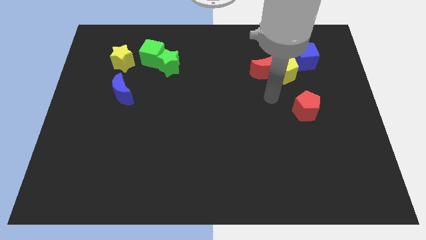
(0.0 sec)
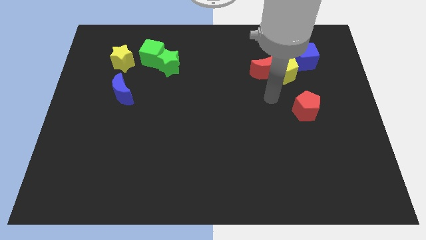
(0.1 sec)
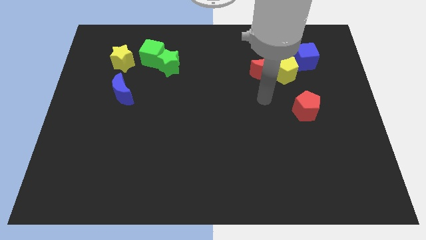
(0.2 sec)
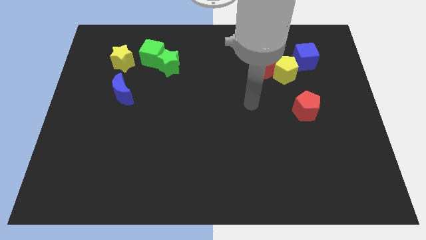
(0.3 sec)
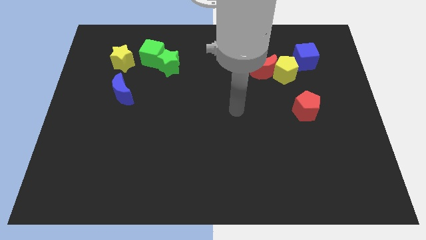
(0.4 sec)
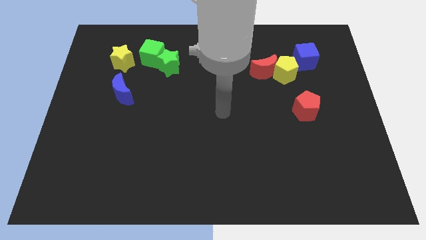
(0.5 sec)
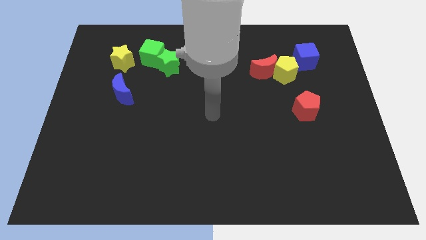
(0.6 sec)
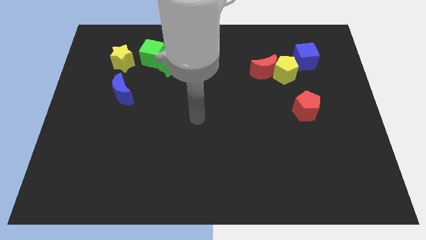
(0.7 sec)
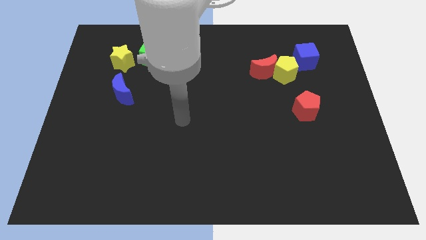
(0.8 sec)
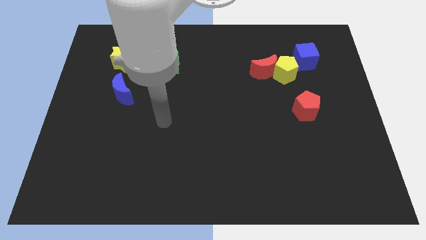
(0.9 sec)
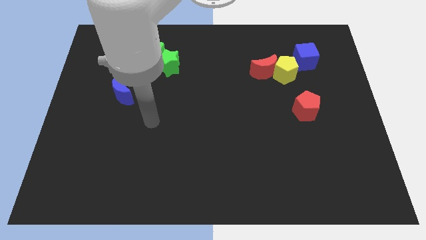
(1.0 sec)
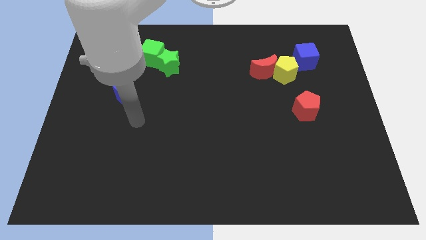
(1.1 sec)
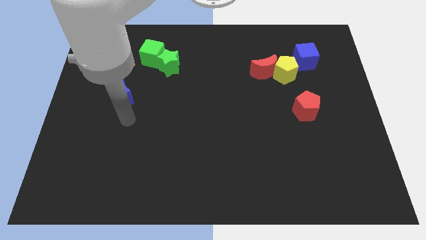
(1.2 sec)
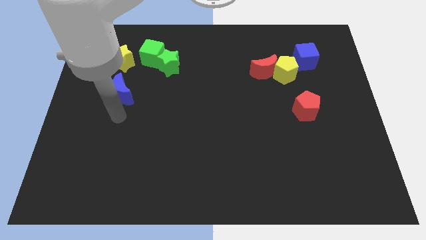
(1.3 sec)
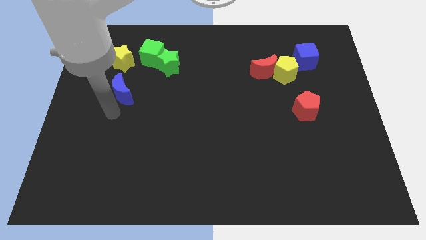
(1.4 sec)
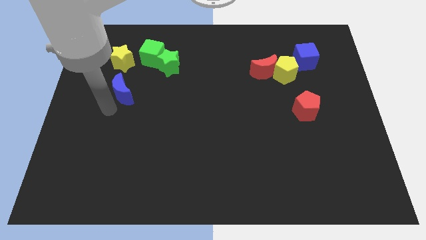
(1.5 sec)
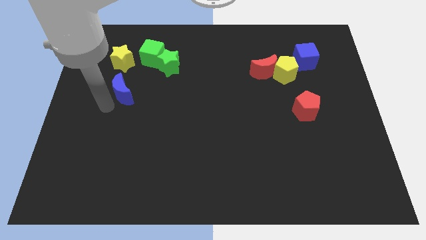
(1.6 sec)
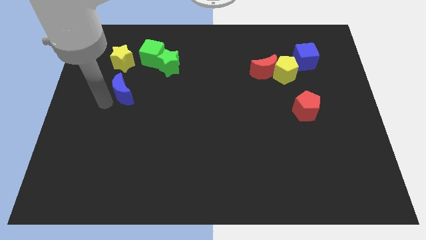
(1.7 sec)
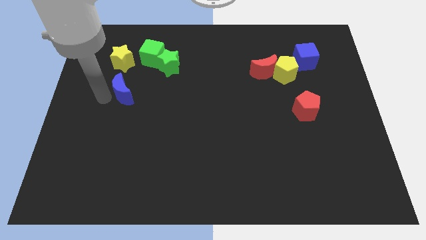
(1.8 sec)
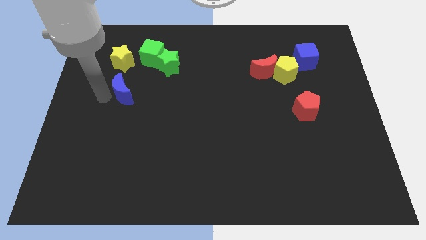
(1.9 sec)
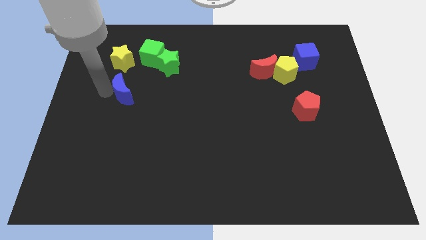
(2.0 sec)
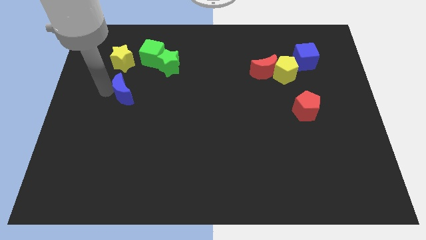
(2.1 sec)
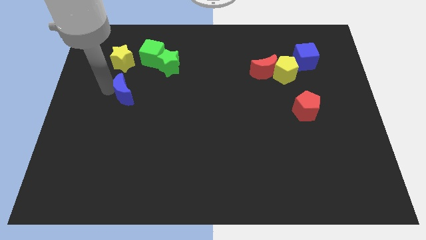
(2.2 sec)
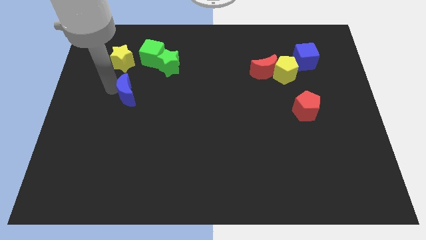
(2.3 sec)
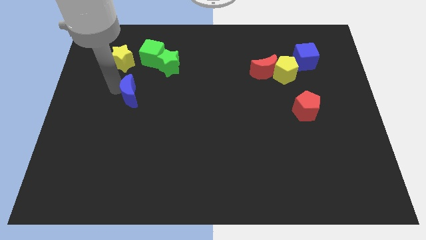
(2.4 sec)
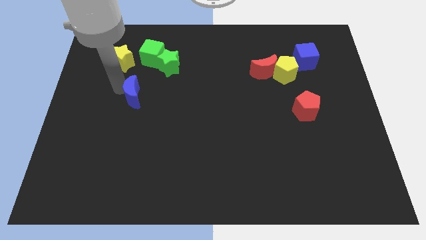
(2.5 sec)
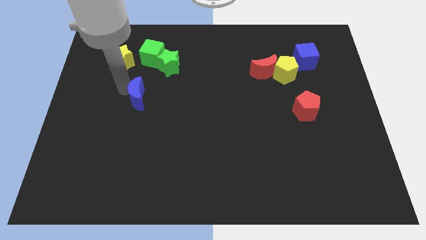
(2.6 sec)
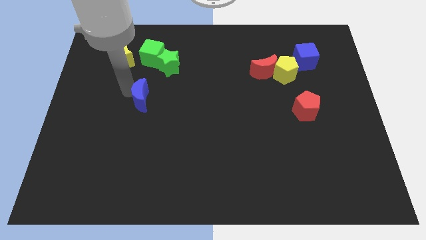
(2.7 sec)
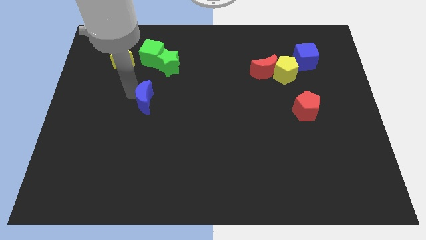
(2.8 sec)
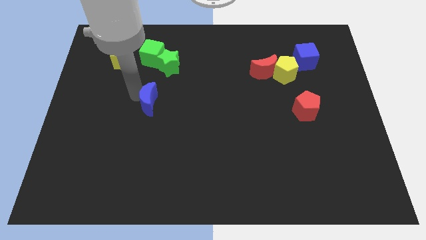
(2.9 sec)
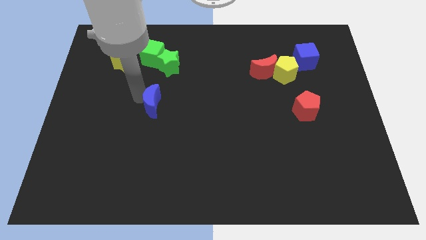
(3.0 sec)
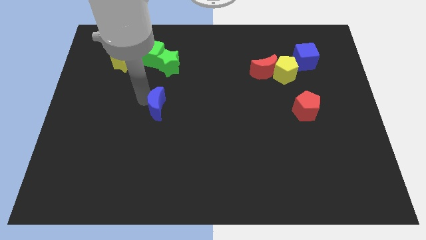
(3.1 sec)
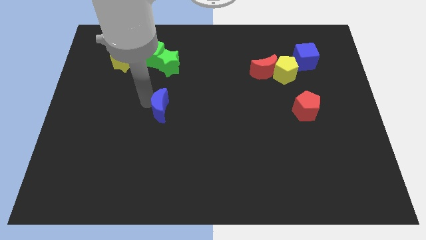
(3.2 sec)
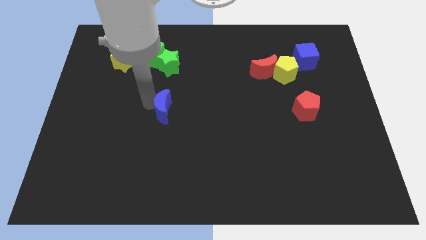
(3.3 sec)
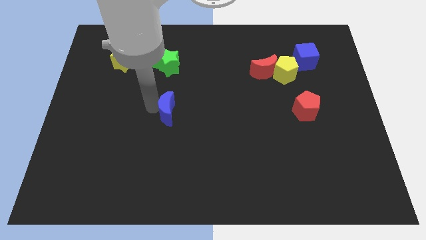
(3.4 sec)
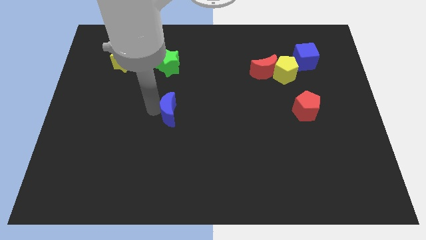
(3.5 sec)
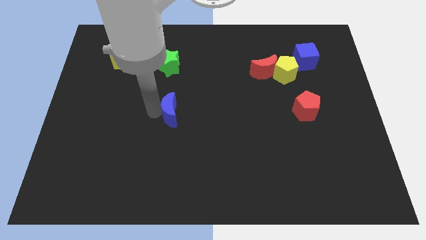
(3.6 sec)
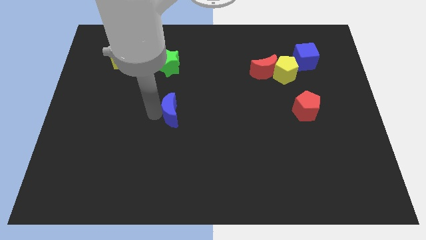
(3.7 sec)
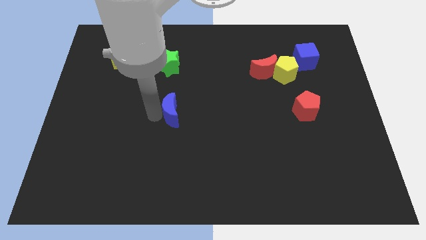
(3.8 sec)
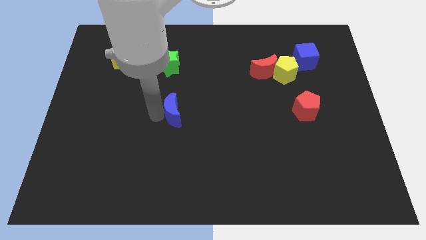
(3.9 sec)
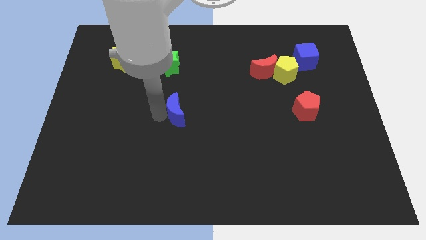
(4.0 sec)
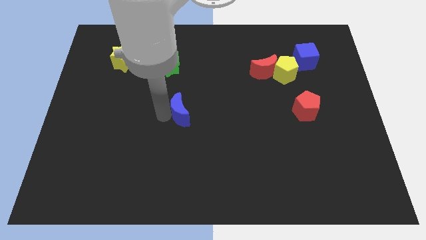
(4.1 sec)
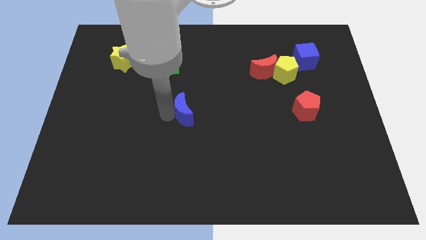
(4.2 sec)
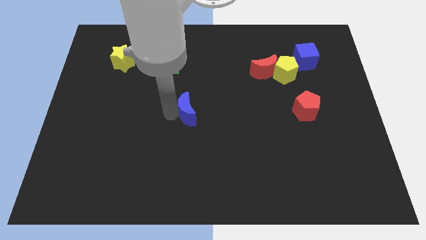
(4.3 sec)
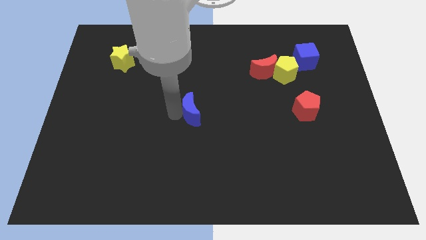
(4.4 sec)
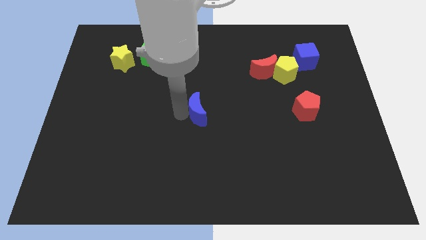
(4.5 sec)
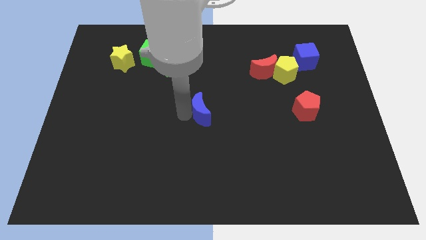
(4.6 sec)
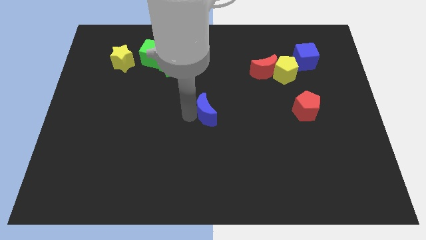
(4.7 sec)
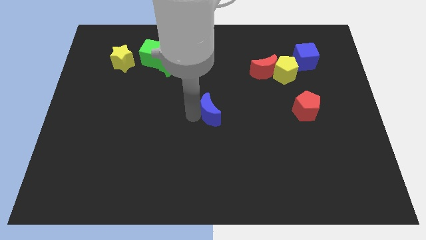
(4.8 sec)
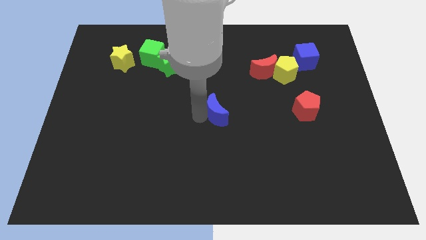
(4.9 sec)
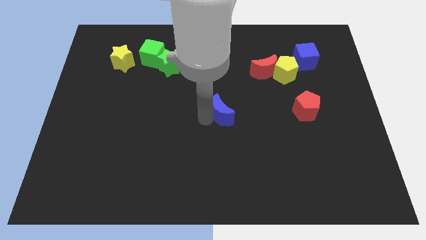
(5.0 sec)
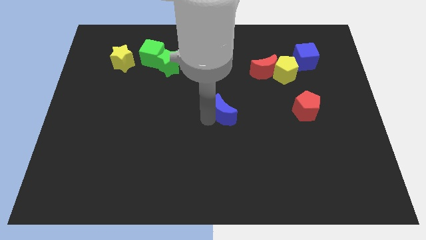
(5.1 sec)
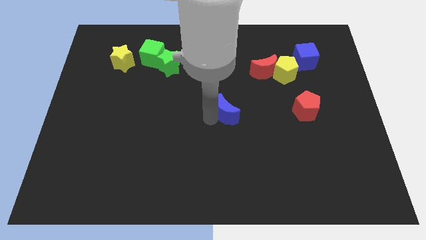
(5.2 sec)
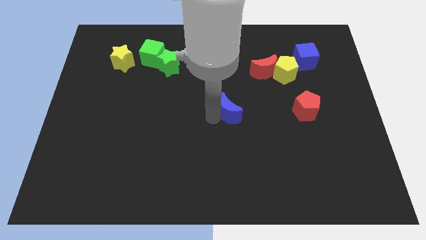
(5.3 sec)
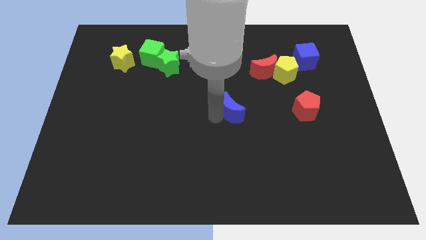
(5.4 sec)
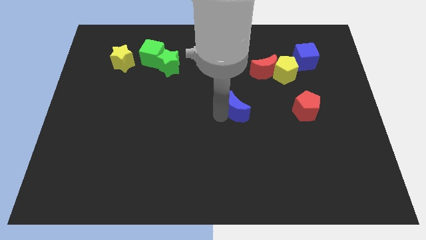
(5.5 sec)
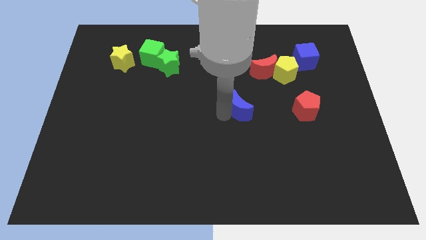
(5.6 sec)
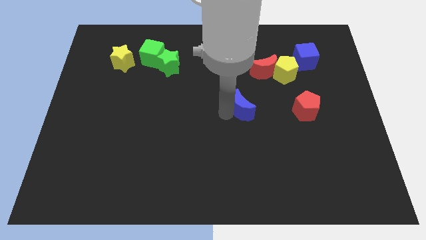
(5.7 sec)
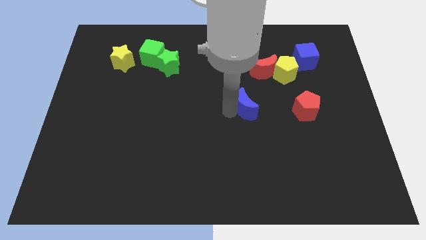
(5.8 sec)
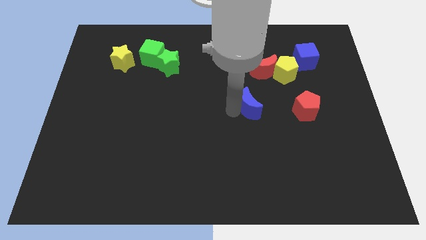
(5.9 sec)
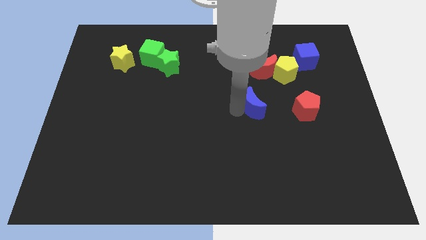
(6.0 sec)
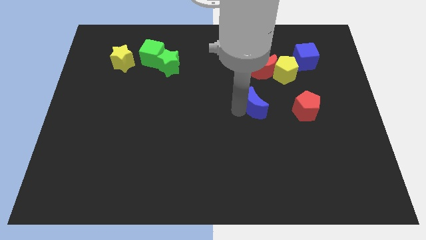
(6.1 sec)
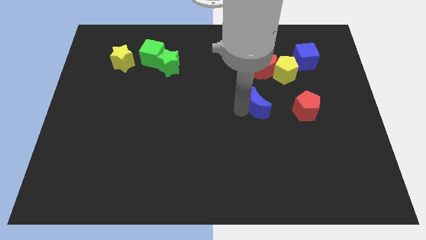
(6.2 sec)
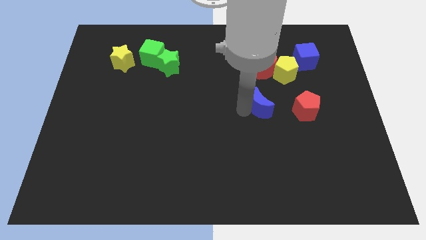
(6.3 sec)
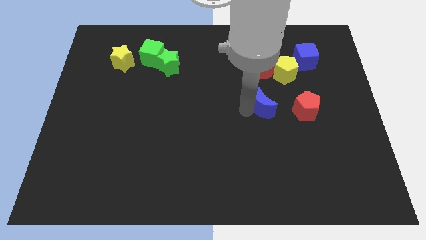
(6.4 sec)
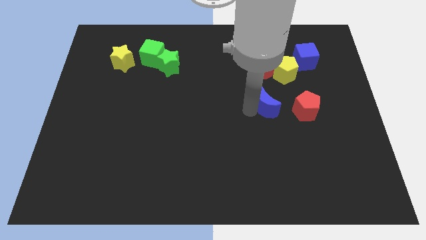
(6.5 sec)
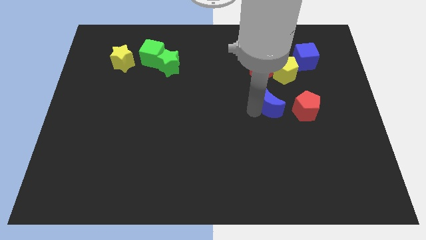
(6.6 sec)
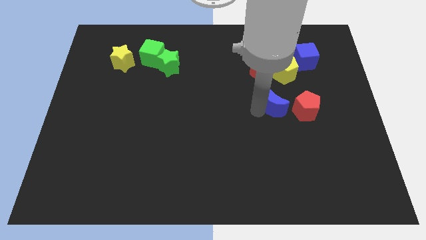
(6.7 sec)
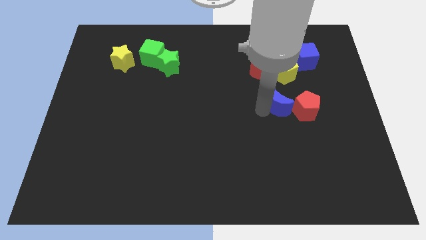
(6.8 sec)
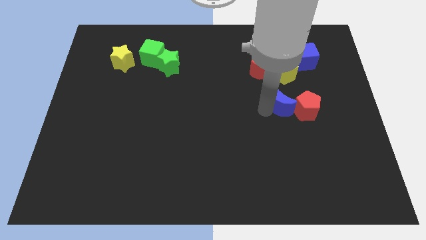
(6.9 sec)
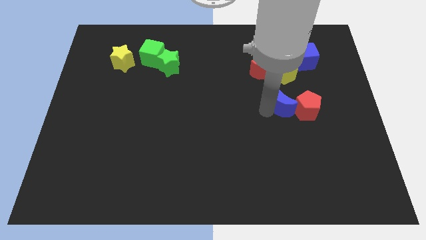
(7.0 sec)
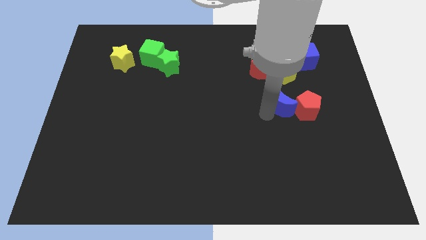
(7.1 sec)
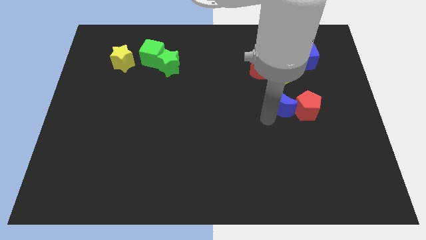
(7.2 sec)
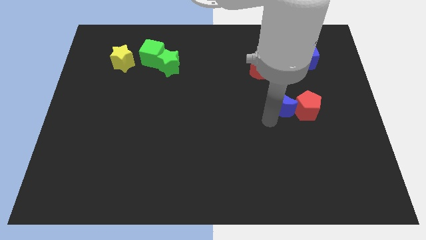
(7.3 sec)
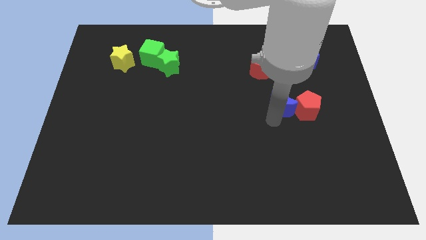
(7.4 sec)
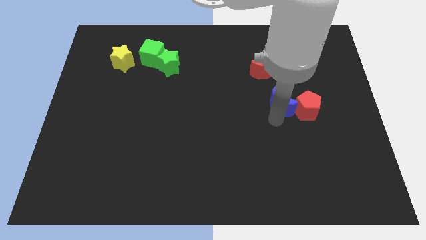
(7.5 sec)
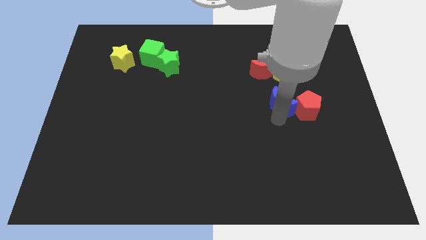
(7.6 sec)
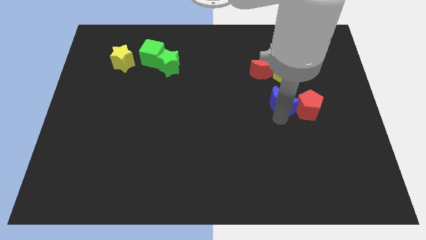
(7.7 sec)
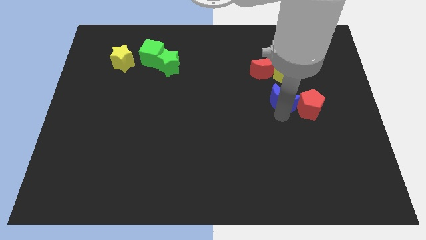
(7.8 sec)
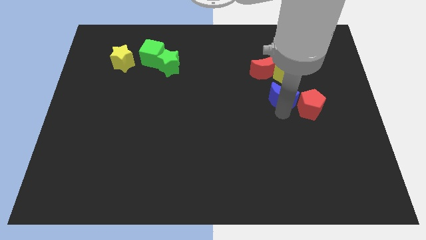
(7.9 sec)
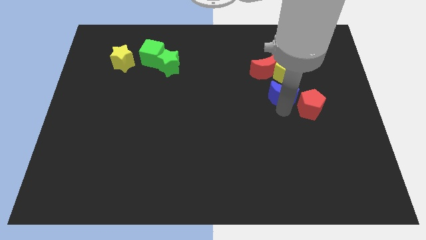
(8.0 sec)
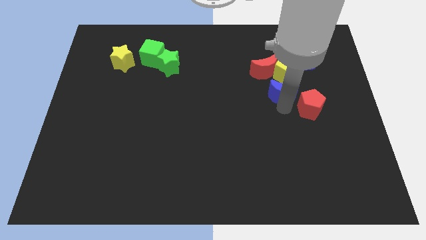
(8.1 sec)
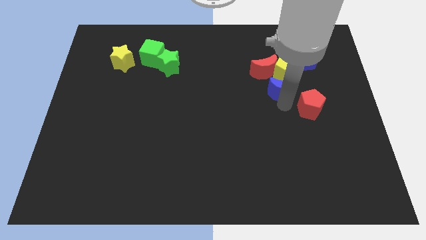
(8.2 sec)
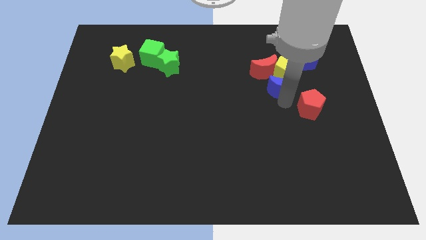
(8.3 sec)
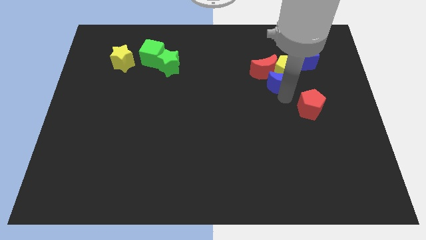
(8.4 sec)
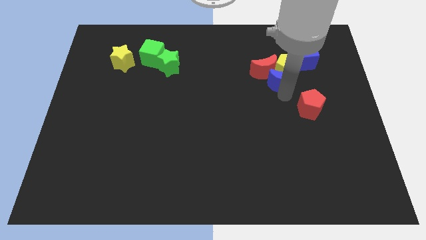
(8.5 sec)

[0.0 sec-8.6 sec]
put the blue moon to the yellow pentagon
